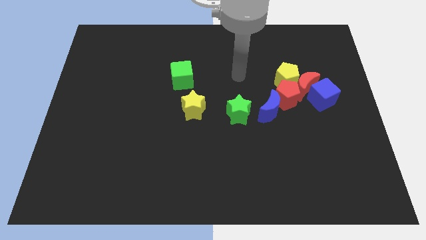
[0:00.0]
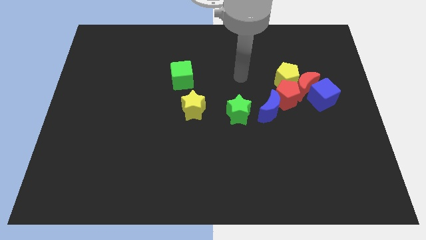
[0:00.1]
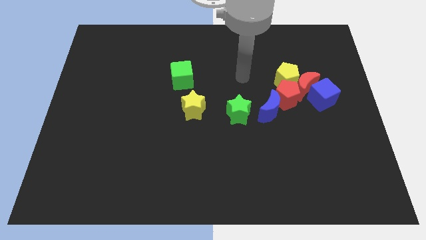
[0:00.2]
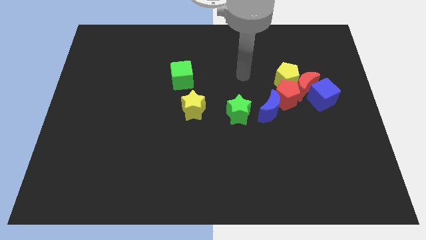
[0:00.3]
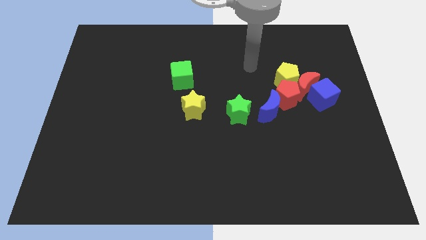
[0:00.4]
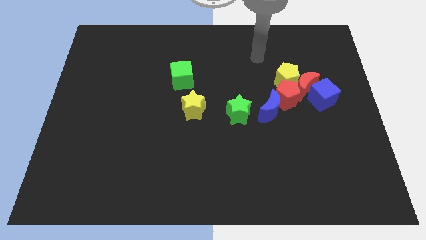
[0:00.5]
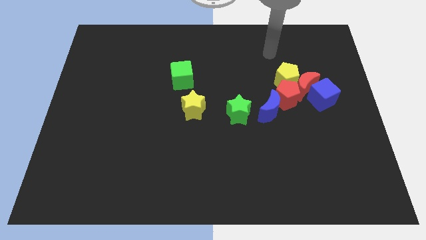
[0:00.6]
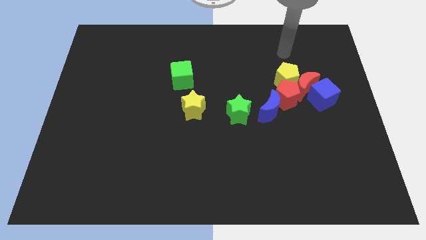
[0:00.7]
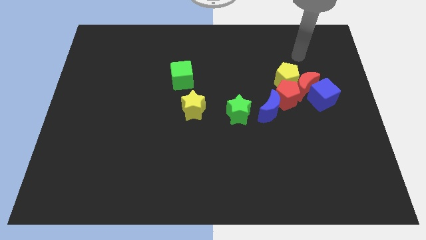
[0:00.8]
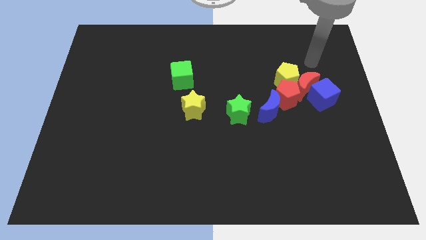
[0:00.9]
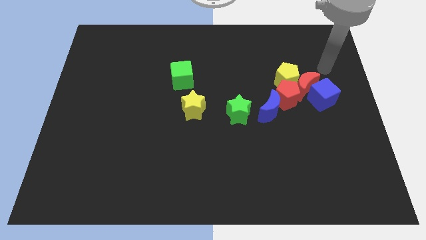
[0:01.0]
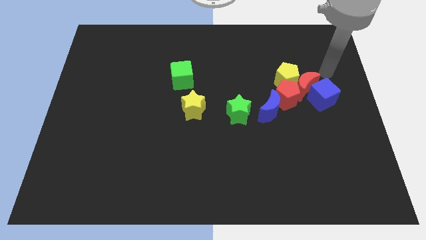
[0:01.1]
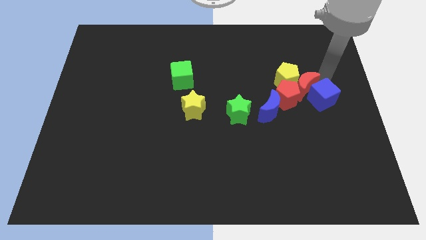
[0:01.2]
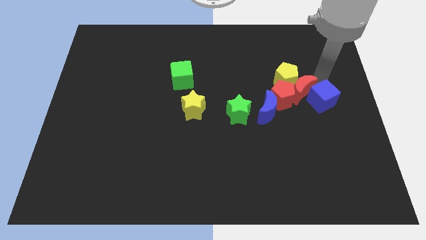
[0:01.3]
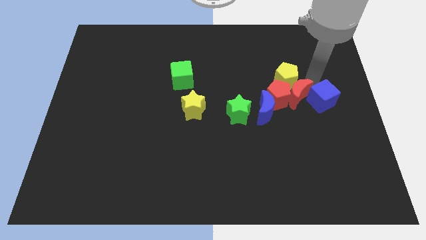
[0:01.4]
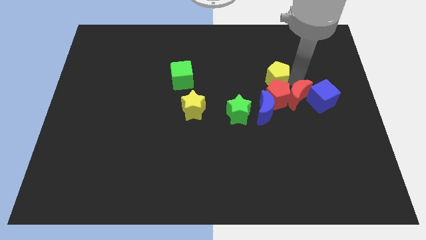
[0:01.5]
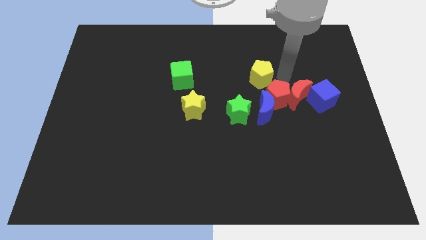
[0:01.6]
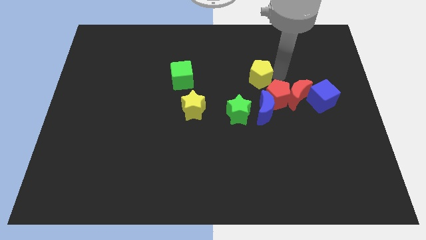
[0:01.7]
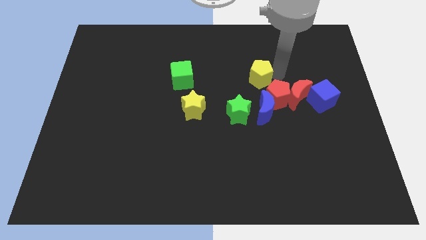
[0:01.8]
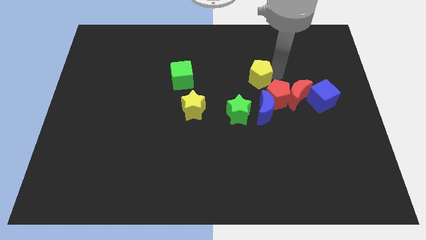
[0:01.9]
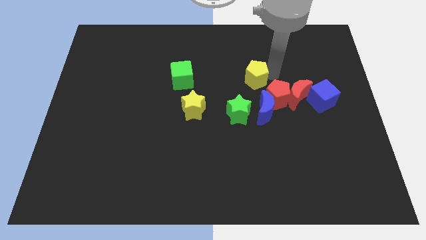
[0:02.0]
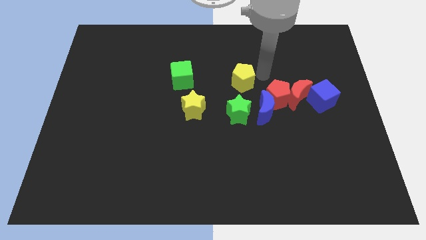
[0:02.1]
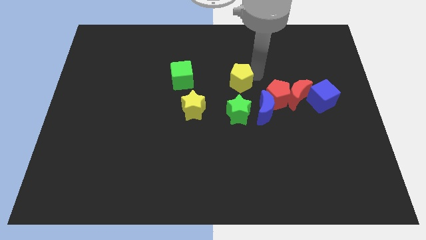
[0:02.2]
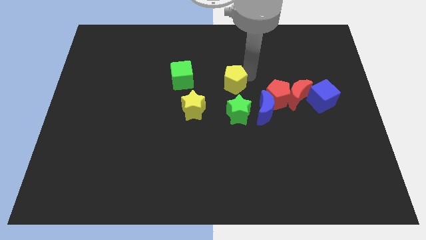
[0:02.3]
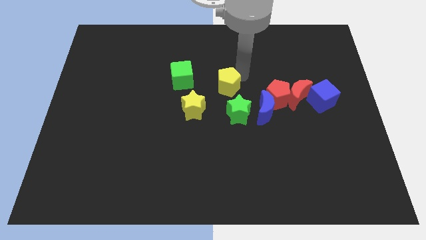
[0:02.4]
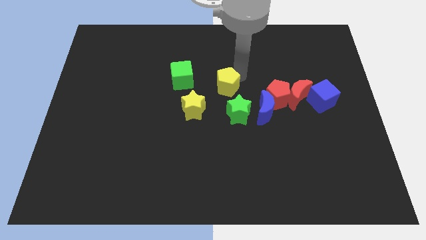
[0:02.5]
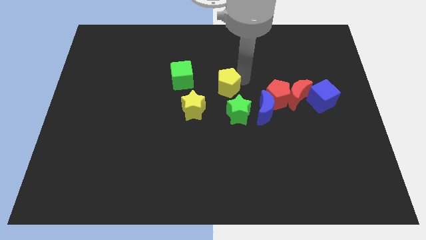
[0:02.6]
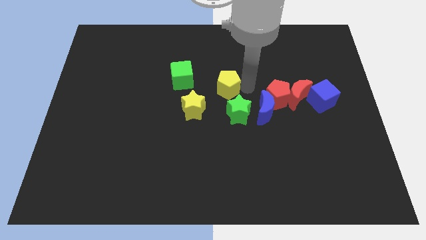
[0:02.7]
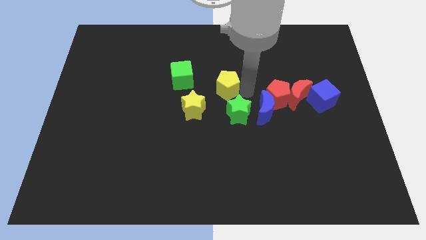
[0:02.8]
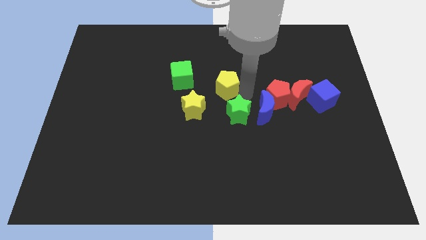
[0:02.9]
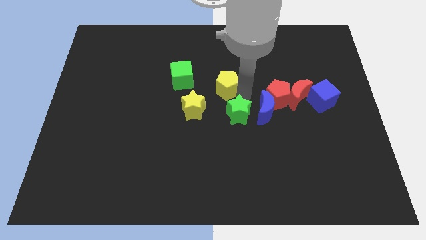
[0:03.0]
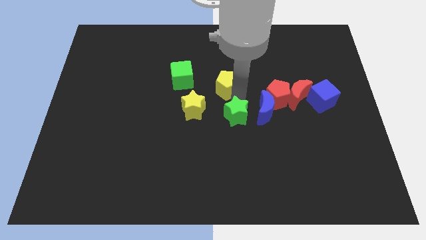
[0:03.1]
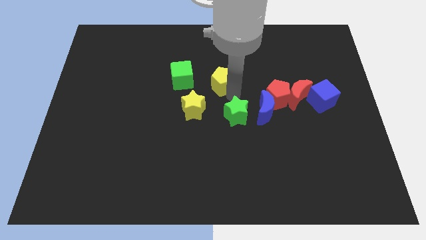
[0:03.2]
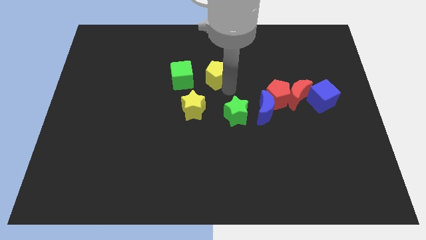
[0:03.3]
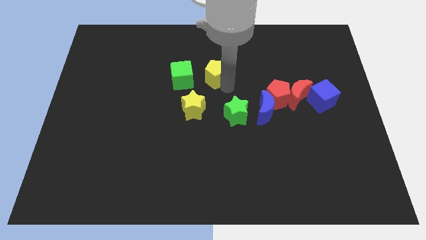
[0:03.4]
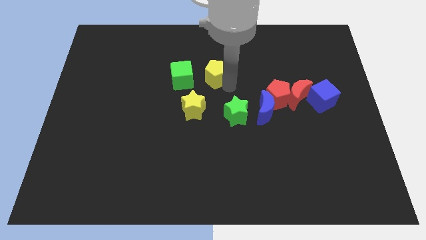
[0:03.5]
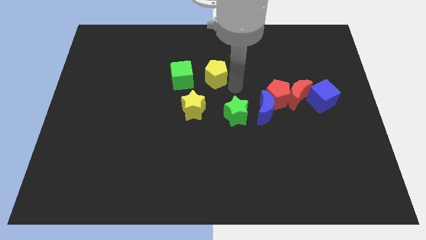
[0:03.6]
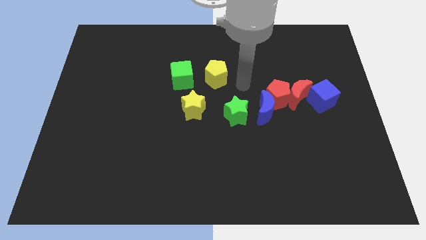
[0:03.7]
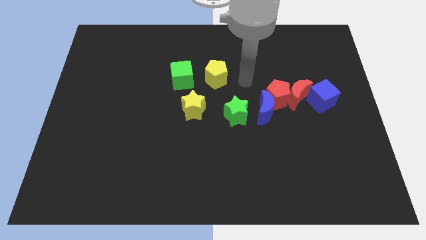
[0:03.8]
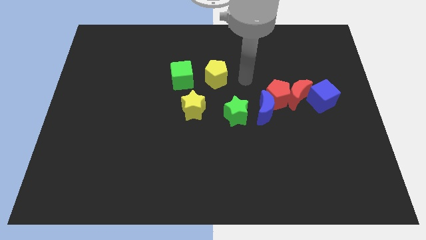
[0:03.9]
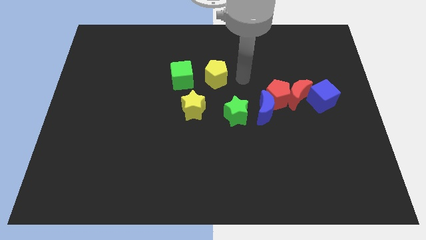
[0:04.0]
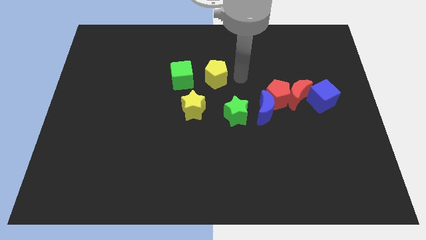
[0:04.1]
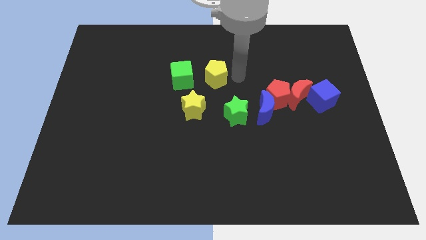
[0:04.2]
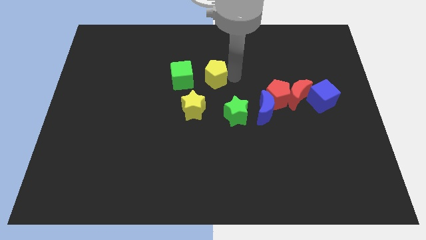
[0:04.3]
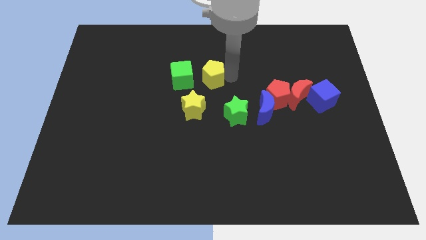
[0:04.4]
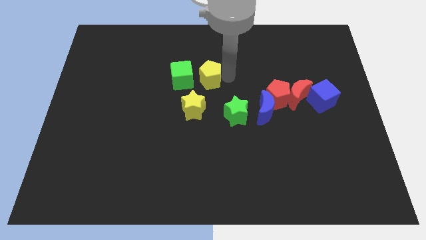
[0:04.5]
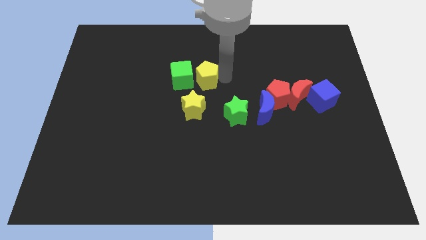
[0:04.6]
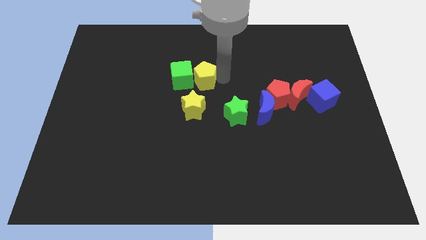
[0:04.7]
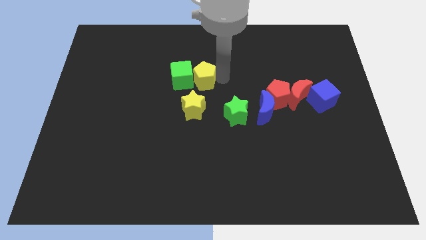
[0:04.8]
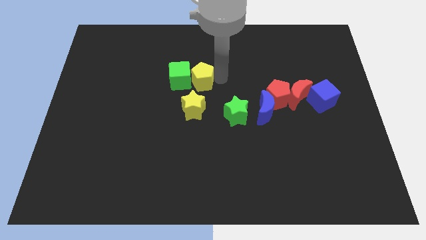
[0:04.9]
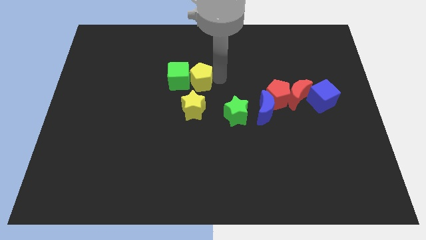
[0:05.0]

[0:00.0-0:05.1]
move the yellow pentagon into the green cube

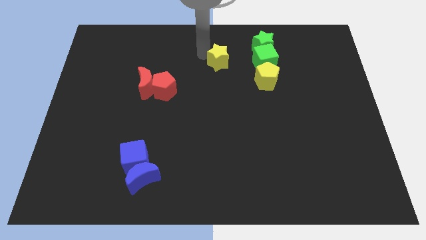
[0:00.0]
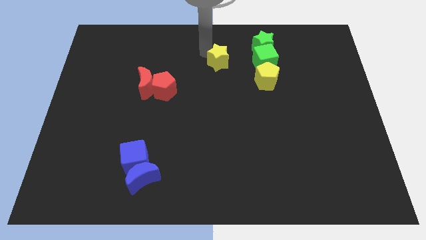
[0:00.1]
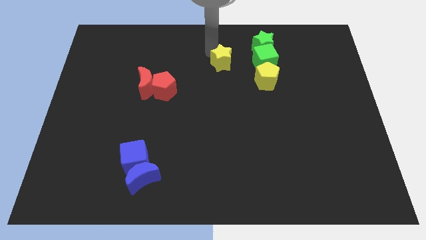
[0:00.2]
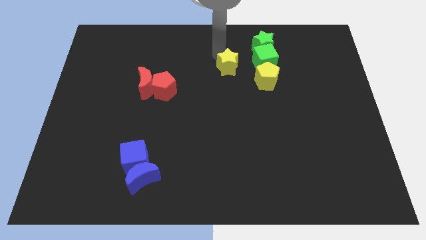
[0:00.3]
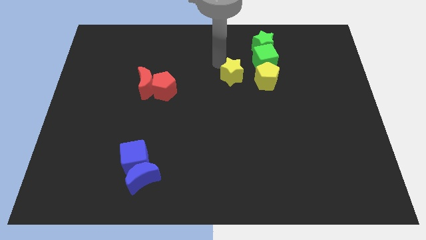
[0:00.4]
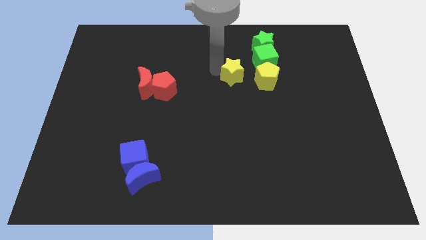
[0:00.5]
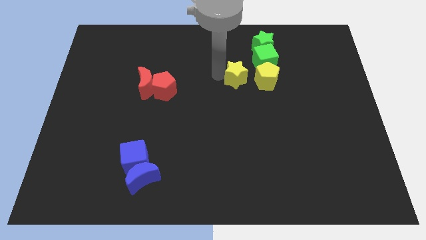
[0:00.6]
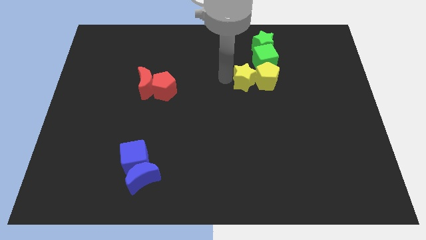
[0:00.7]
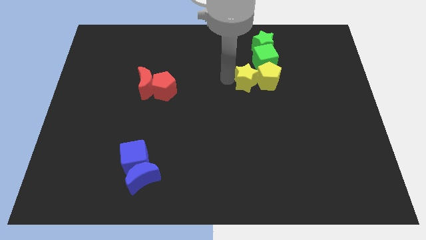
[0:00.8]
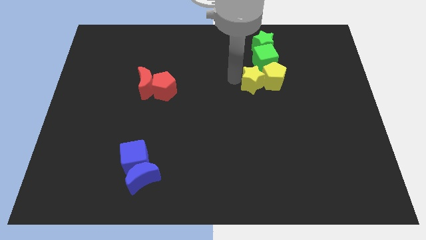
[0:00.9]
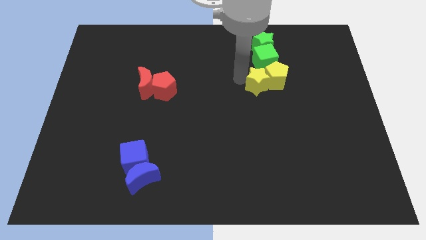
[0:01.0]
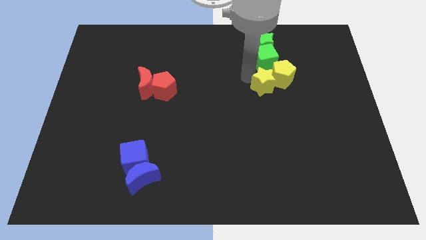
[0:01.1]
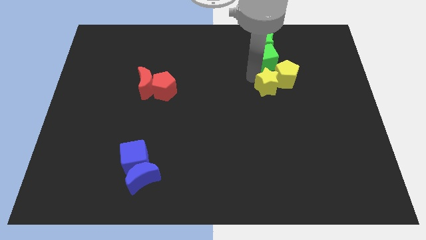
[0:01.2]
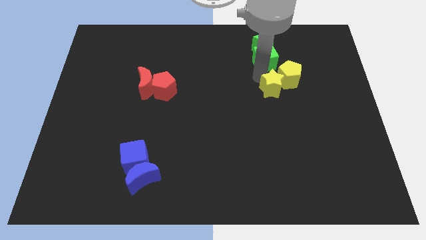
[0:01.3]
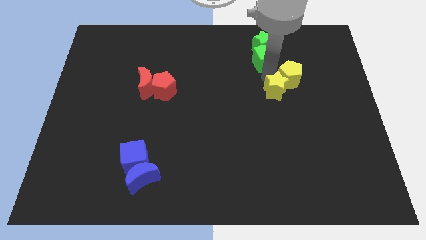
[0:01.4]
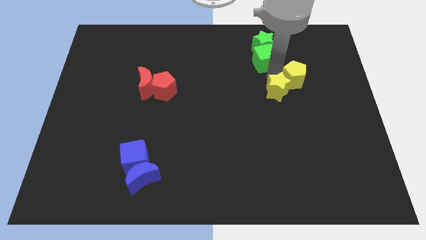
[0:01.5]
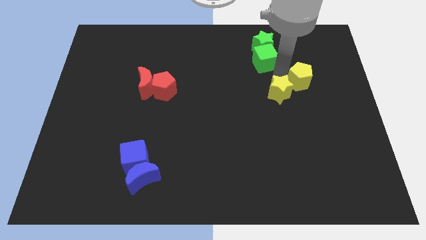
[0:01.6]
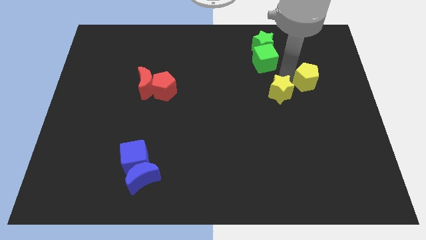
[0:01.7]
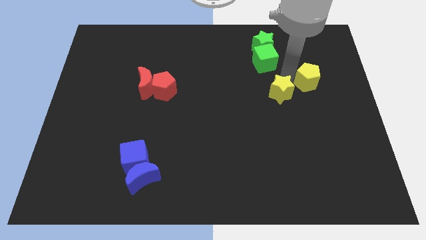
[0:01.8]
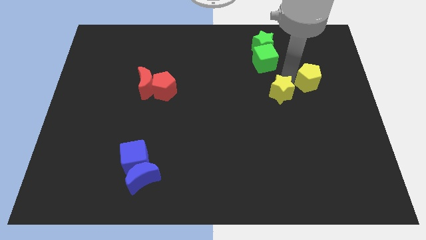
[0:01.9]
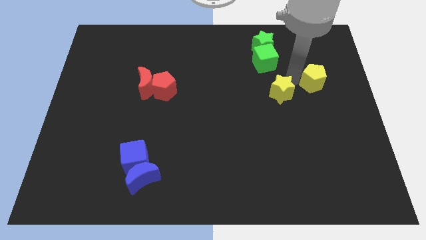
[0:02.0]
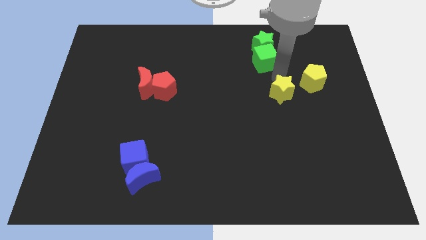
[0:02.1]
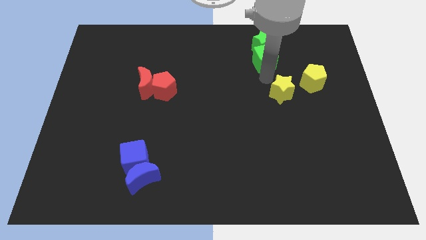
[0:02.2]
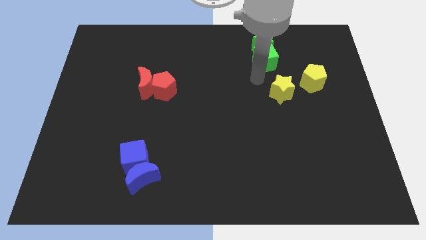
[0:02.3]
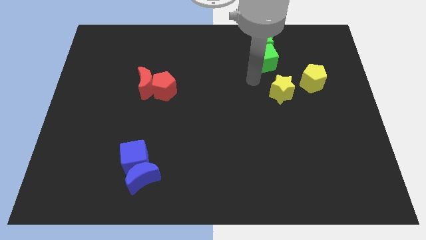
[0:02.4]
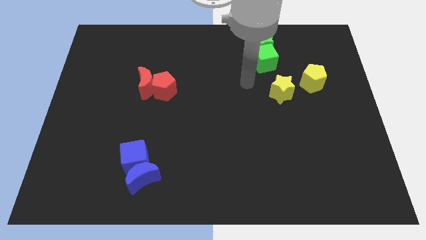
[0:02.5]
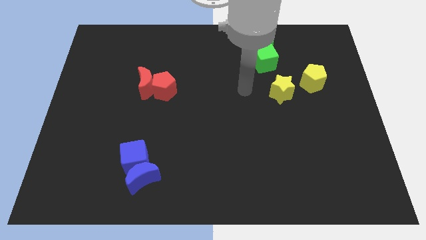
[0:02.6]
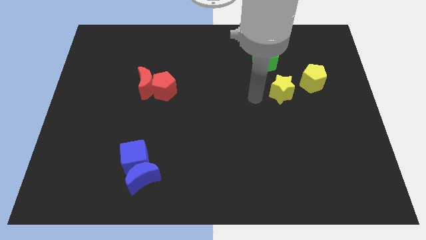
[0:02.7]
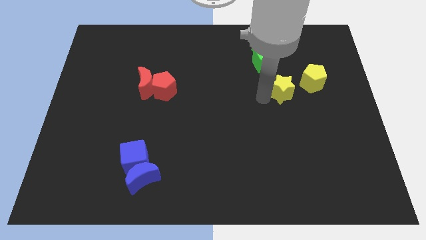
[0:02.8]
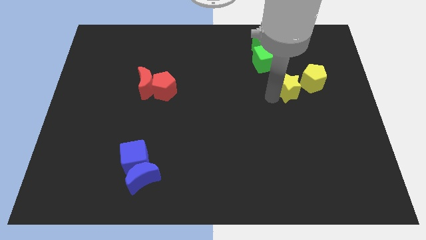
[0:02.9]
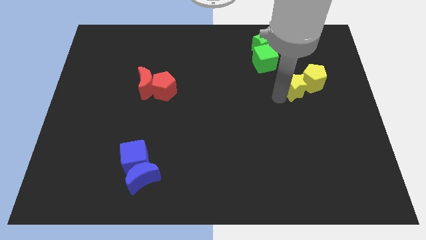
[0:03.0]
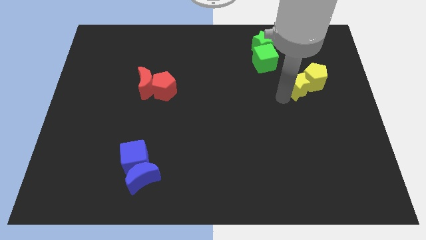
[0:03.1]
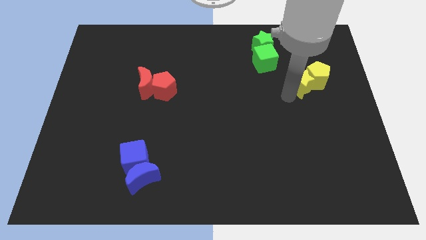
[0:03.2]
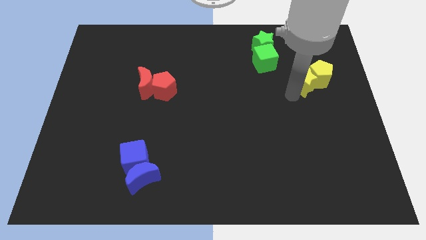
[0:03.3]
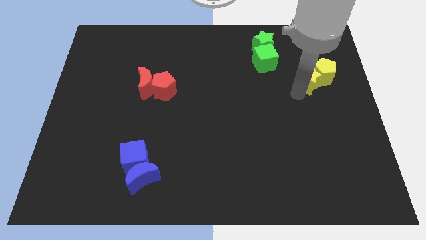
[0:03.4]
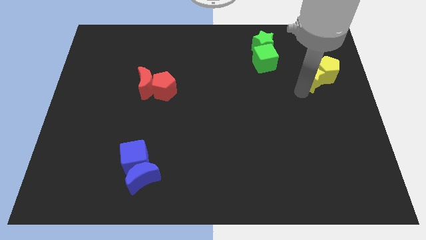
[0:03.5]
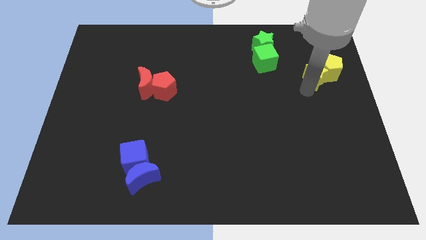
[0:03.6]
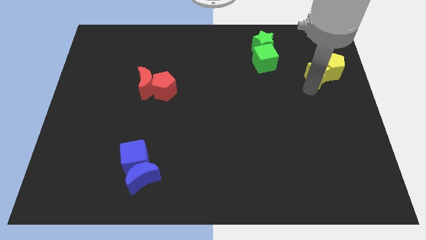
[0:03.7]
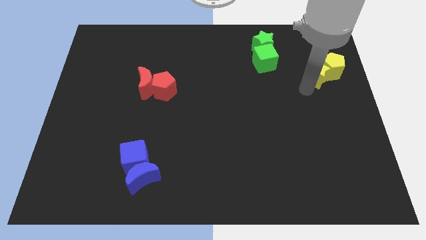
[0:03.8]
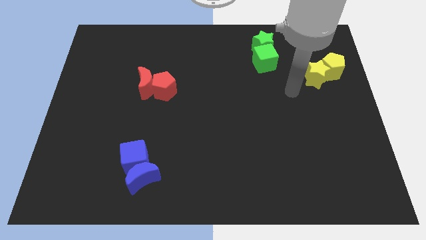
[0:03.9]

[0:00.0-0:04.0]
move the yellow blocks to the right of the board
